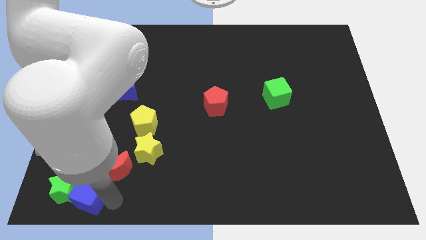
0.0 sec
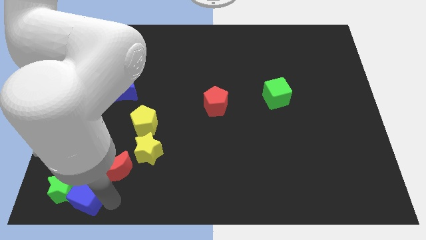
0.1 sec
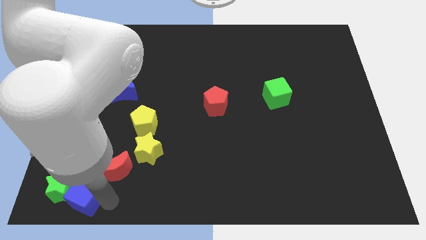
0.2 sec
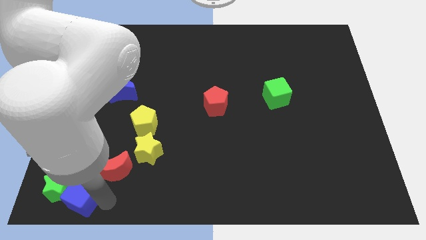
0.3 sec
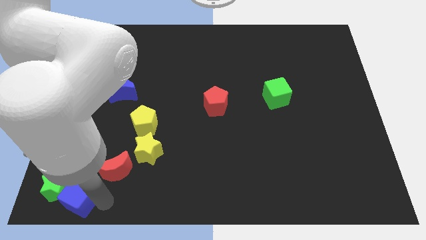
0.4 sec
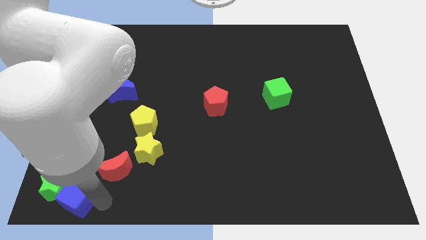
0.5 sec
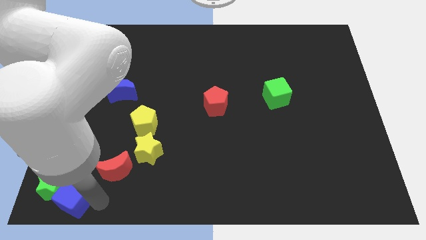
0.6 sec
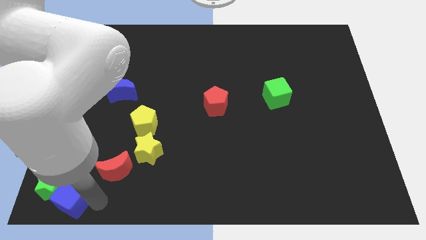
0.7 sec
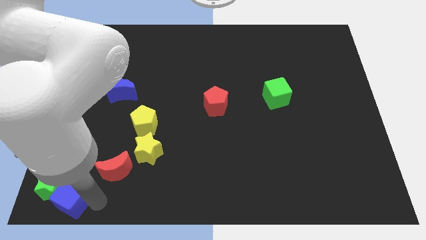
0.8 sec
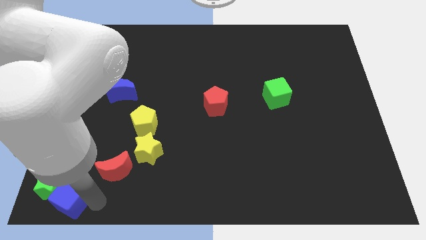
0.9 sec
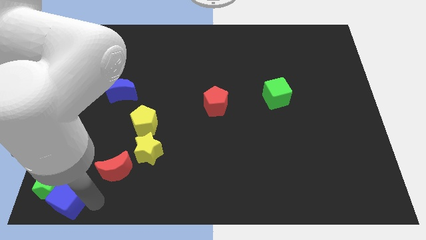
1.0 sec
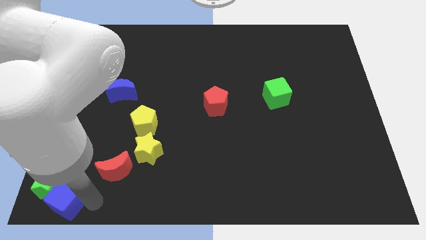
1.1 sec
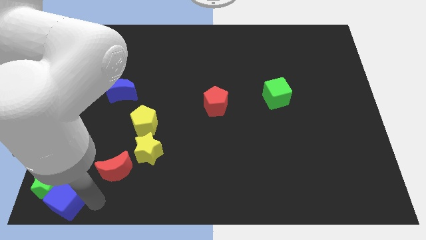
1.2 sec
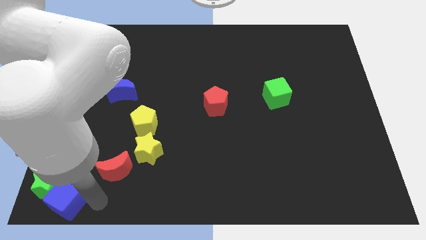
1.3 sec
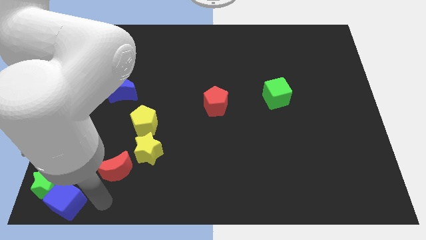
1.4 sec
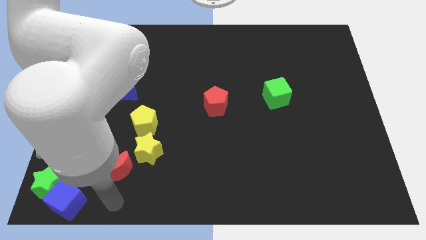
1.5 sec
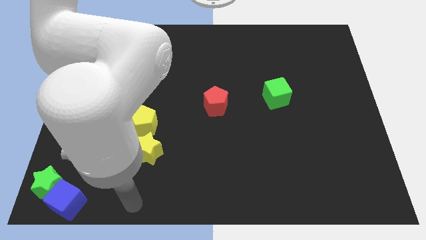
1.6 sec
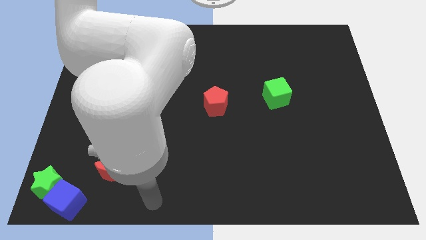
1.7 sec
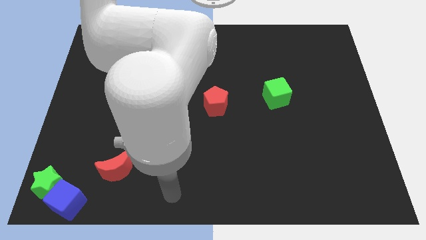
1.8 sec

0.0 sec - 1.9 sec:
place green star and blue cube to the bottom left corner

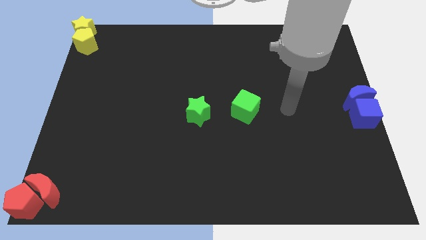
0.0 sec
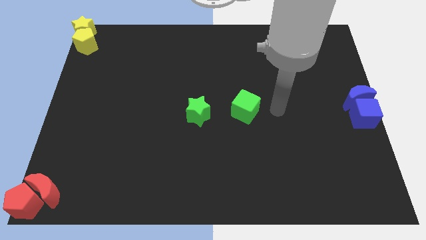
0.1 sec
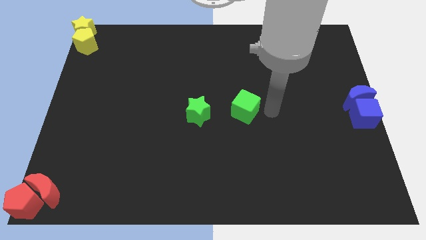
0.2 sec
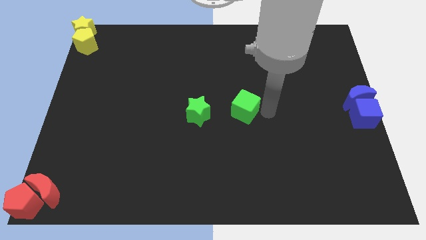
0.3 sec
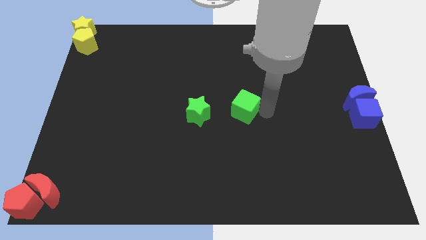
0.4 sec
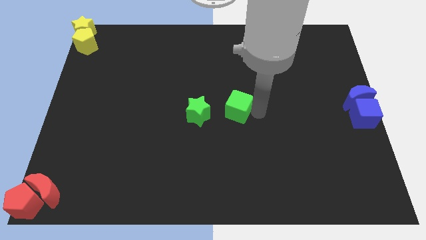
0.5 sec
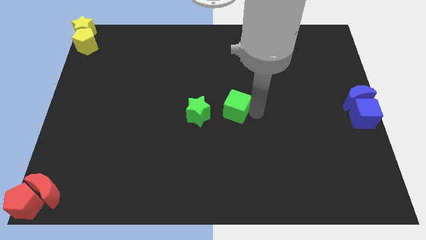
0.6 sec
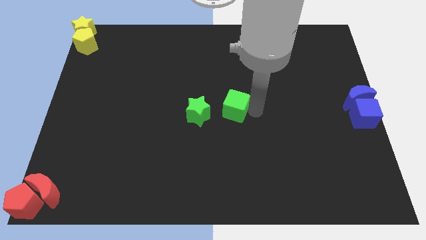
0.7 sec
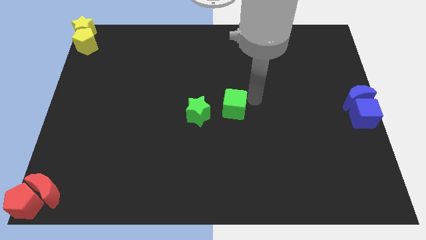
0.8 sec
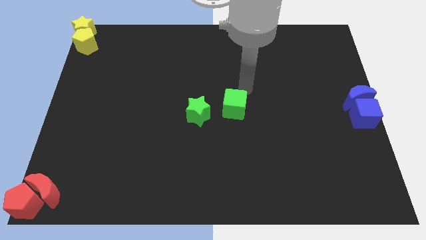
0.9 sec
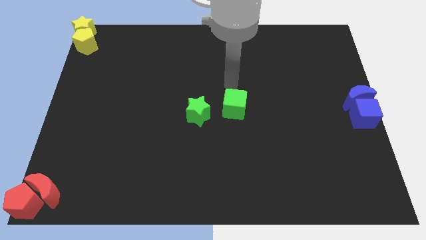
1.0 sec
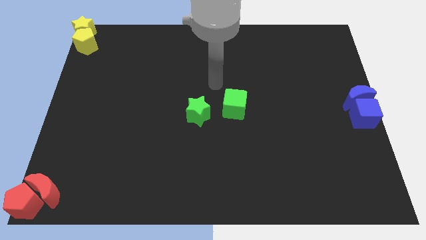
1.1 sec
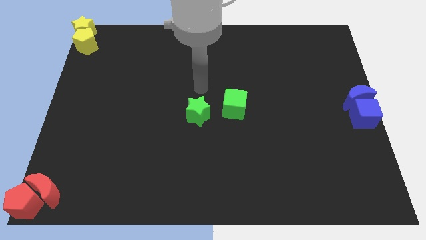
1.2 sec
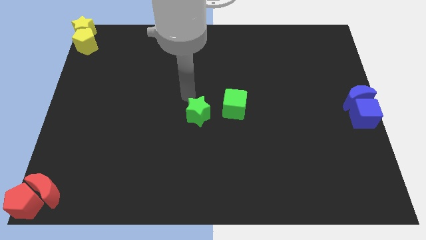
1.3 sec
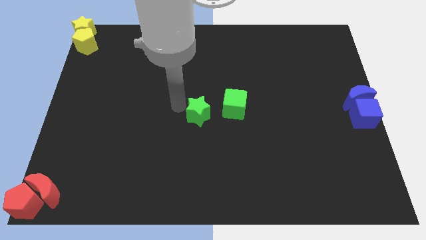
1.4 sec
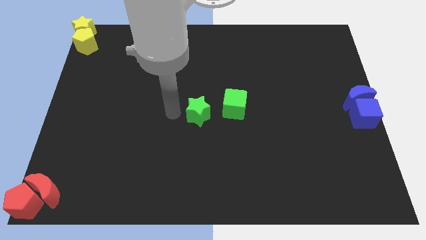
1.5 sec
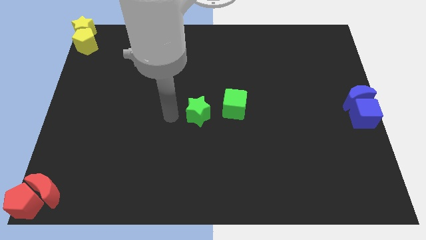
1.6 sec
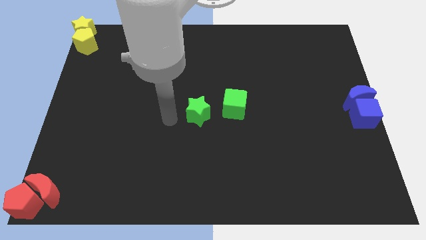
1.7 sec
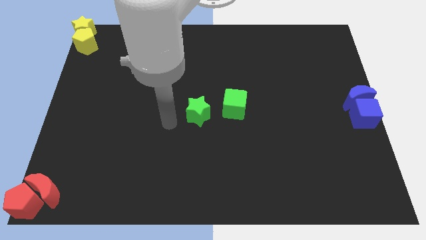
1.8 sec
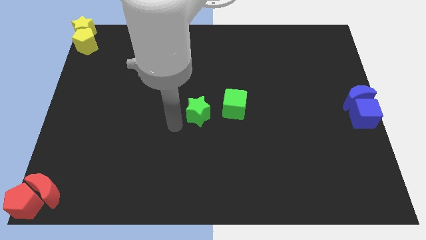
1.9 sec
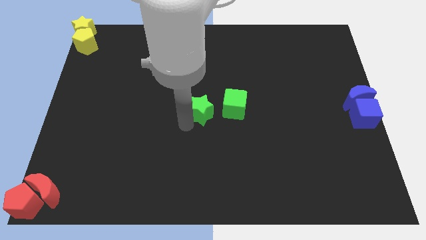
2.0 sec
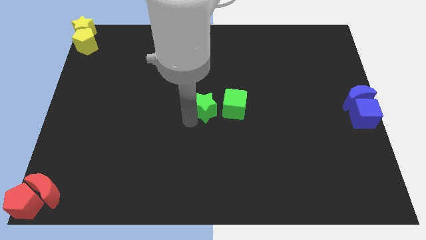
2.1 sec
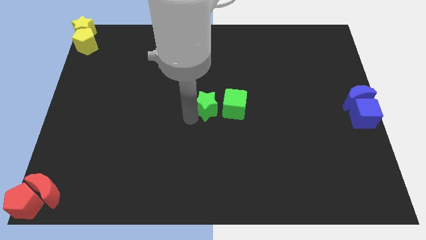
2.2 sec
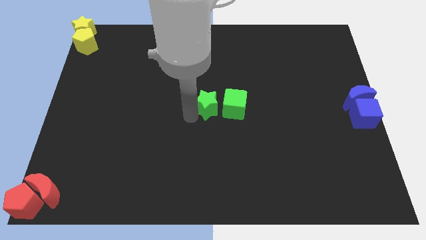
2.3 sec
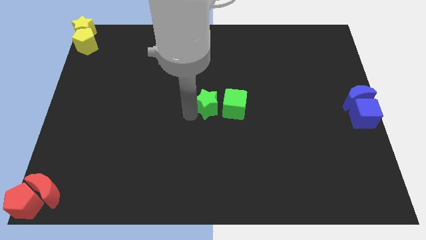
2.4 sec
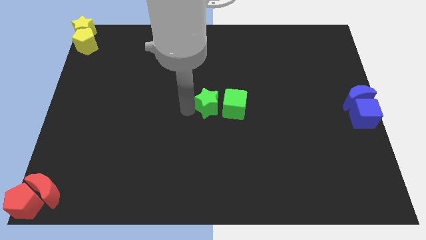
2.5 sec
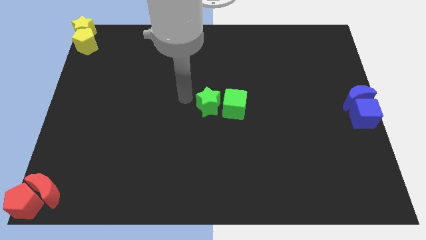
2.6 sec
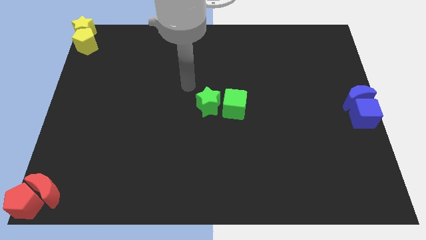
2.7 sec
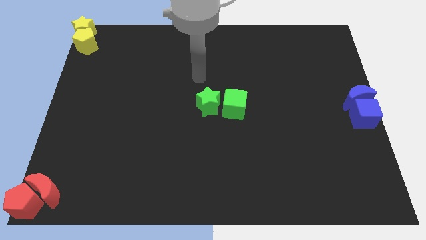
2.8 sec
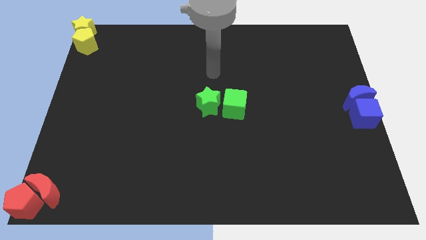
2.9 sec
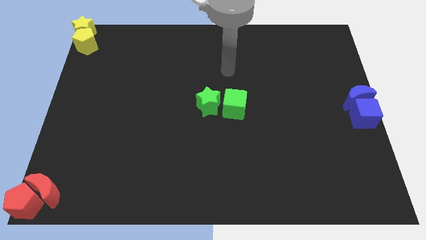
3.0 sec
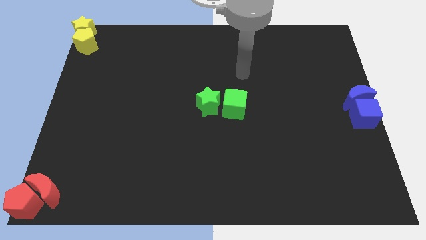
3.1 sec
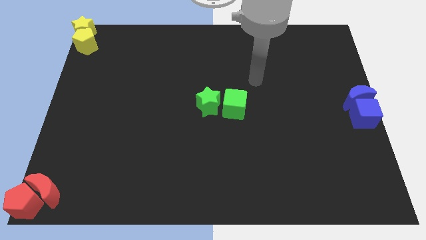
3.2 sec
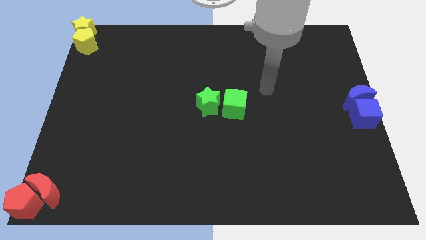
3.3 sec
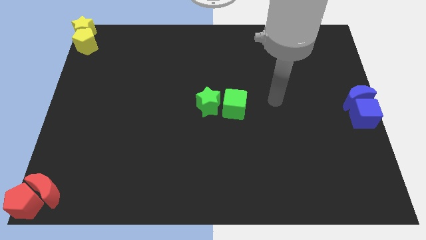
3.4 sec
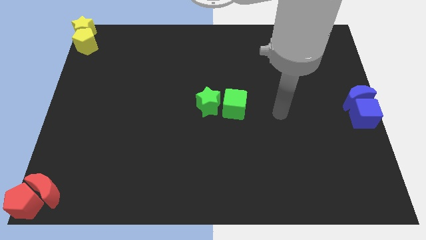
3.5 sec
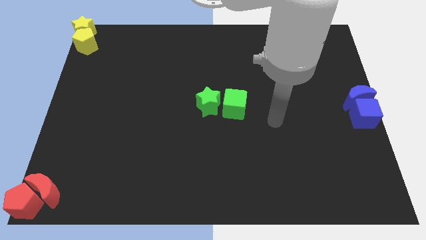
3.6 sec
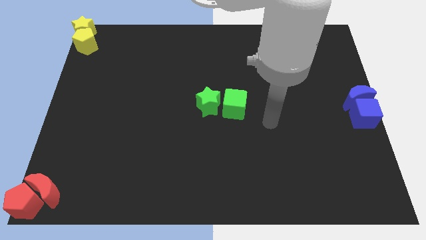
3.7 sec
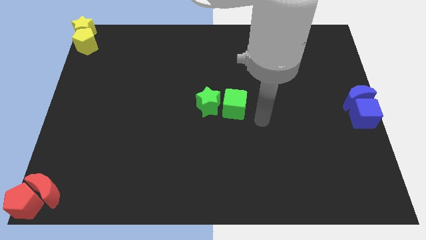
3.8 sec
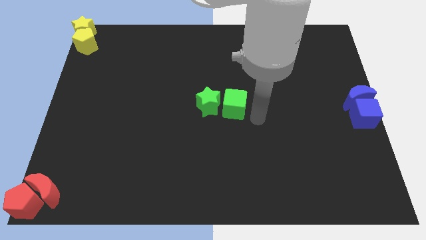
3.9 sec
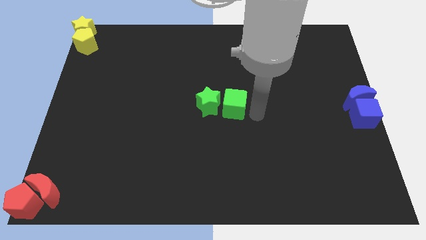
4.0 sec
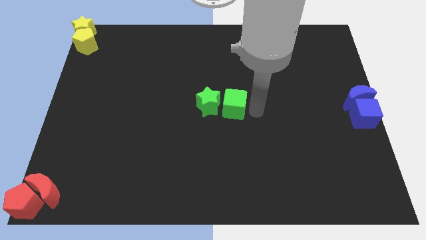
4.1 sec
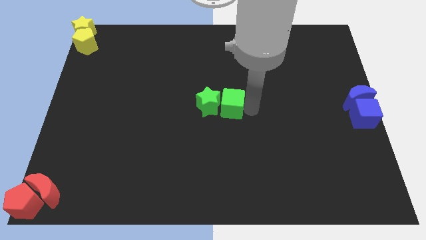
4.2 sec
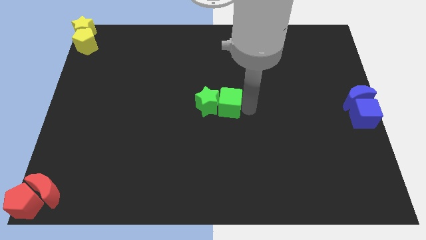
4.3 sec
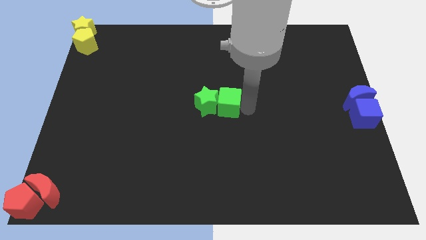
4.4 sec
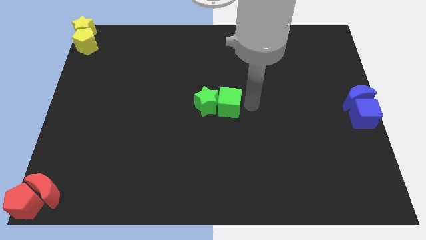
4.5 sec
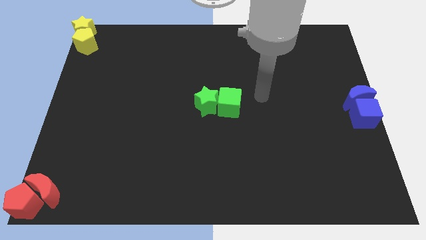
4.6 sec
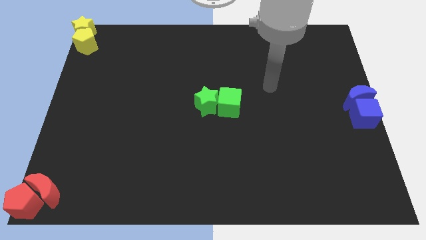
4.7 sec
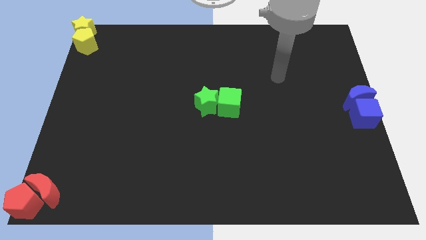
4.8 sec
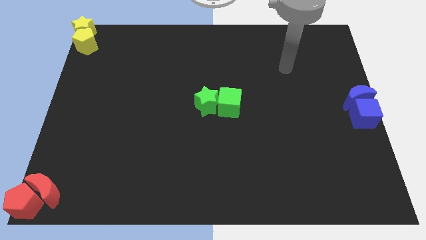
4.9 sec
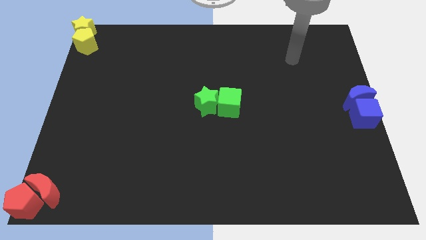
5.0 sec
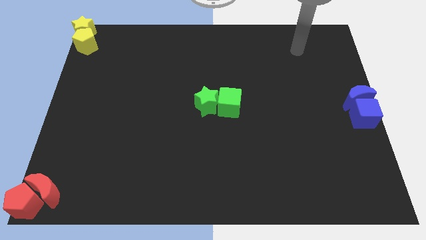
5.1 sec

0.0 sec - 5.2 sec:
place the green blocks at the center of the board

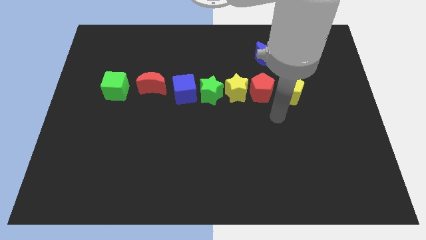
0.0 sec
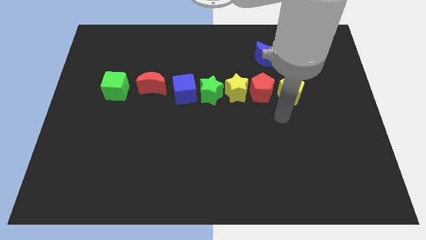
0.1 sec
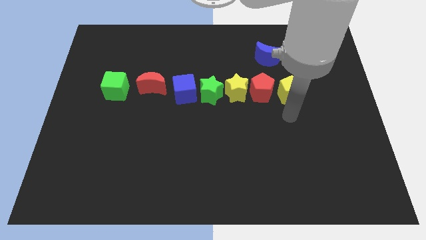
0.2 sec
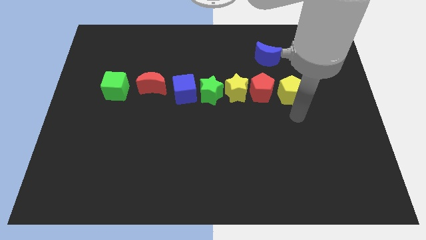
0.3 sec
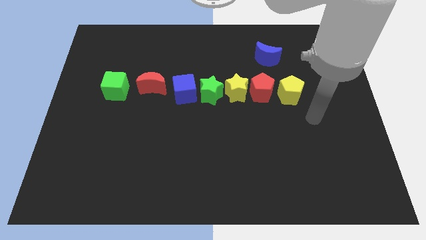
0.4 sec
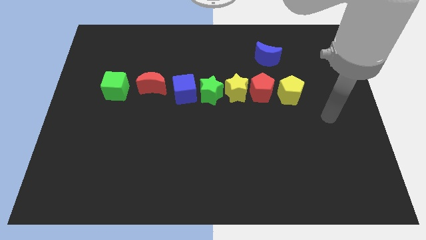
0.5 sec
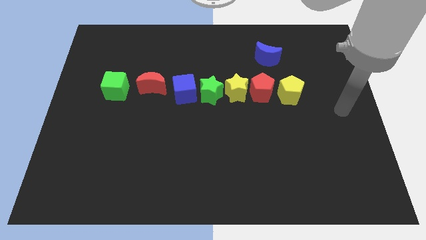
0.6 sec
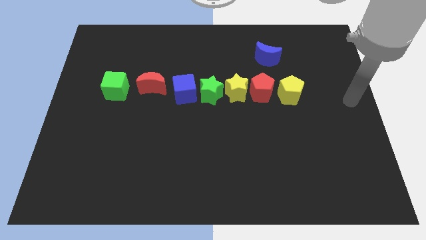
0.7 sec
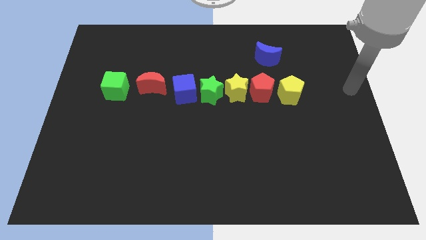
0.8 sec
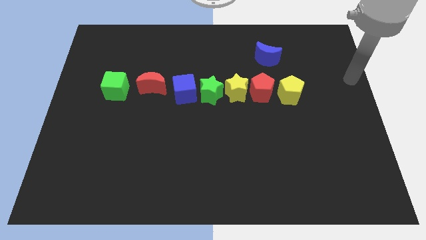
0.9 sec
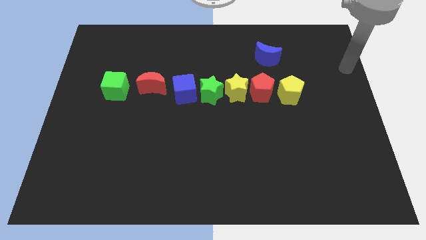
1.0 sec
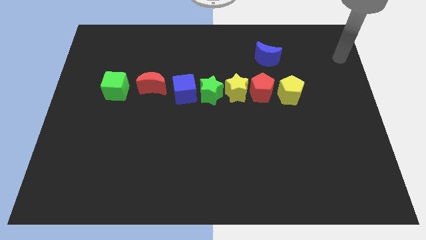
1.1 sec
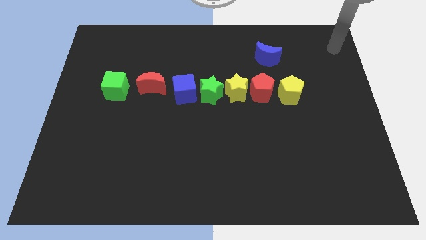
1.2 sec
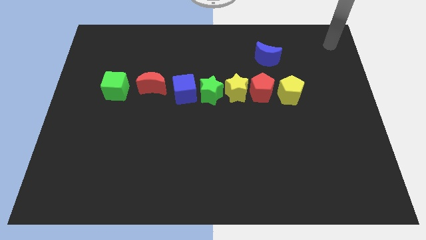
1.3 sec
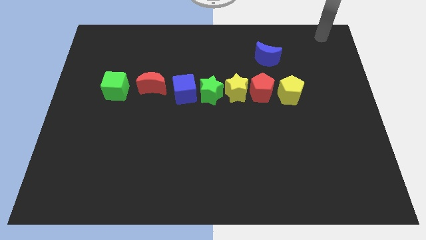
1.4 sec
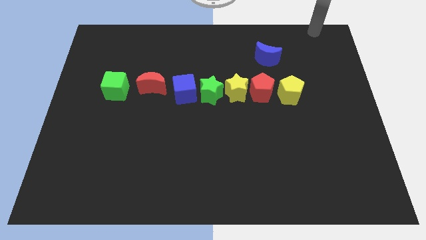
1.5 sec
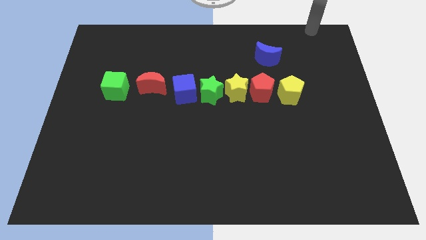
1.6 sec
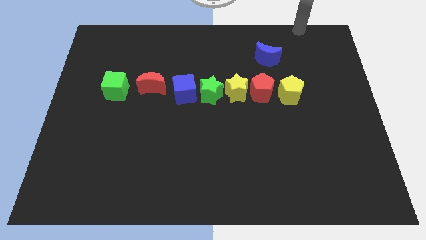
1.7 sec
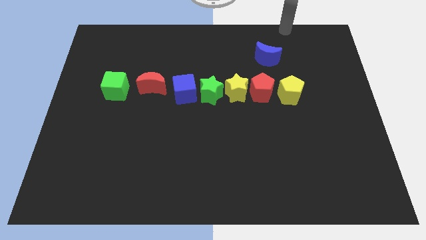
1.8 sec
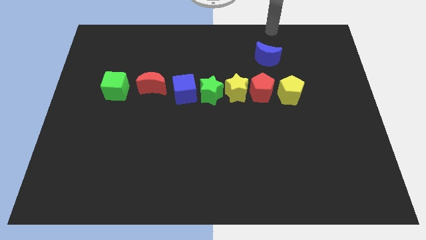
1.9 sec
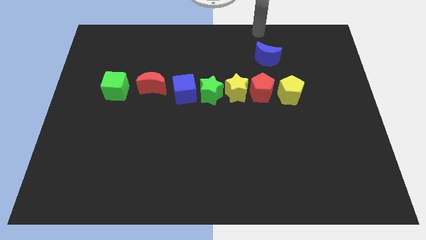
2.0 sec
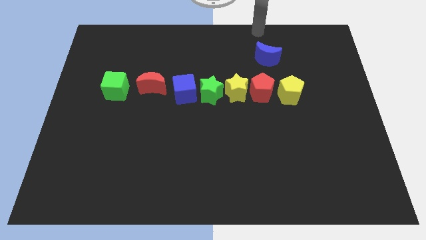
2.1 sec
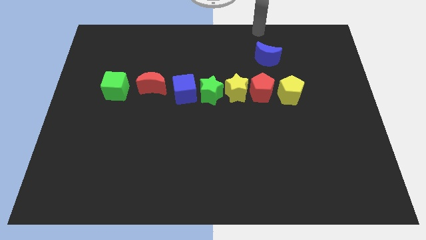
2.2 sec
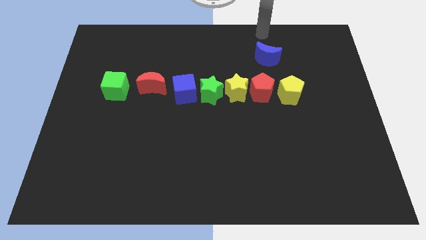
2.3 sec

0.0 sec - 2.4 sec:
go and point your hand at the top side of the blue crescent
